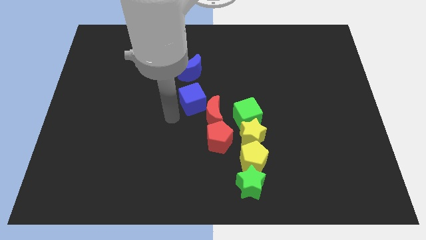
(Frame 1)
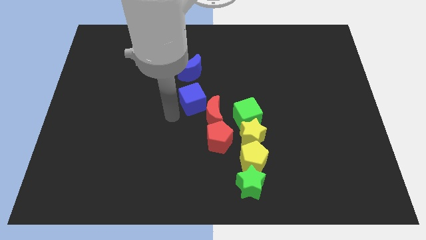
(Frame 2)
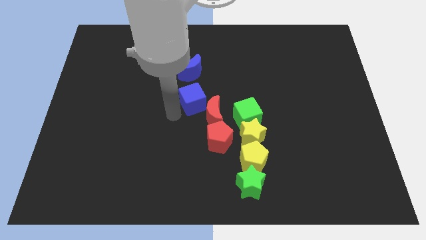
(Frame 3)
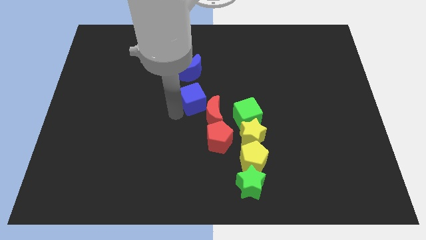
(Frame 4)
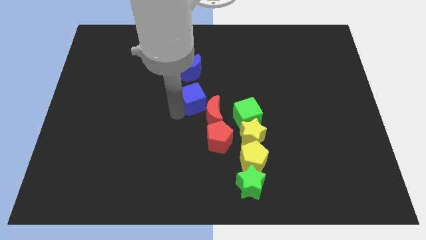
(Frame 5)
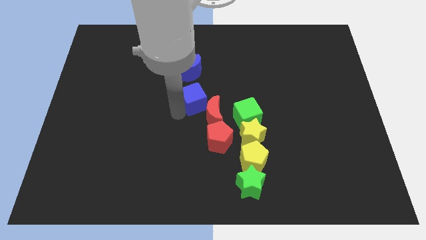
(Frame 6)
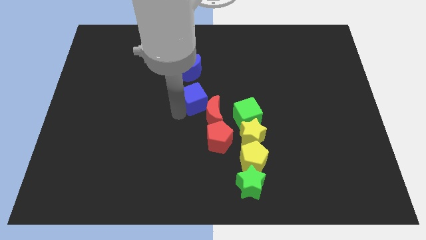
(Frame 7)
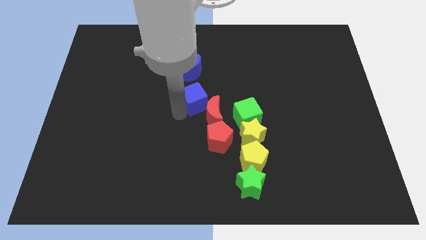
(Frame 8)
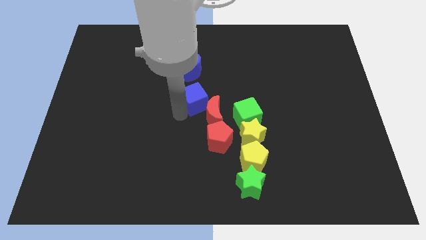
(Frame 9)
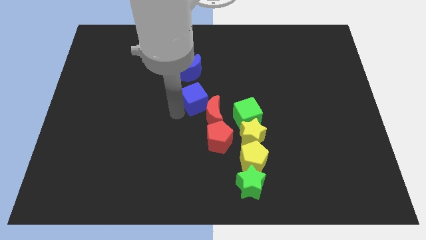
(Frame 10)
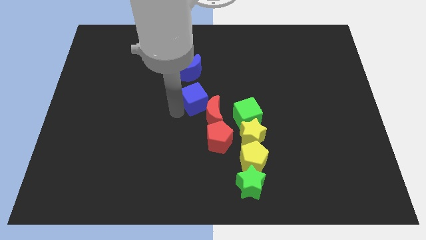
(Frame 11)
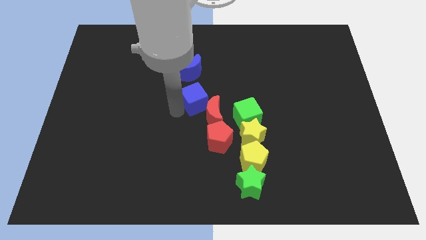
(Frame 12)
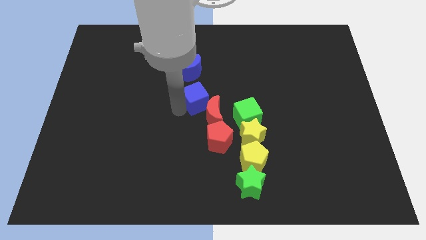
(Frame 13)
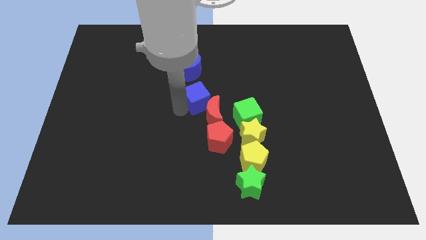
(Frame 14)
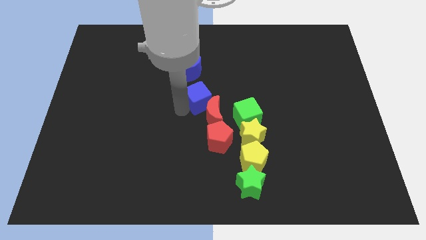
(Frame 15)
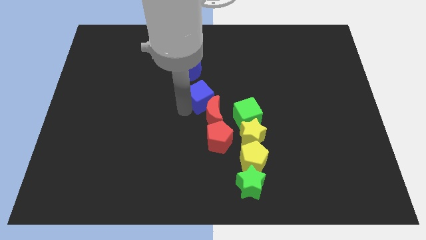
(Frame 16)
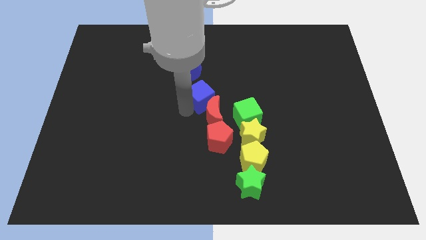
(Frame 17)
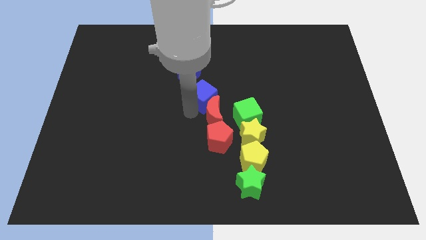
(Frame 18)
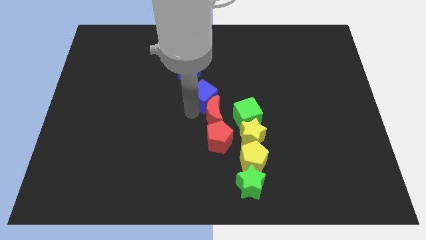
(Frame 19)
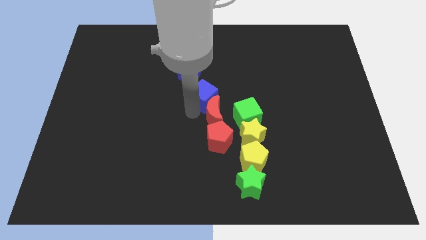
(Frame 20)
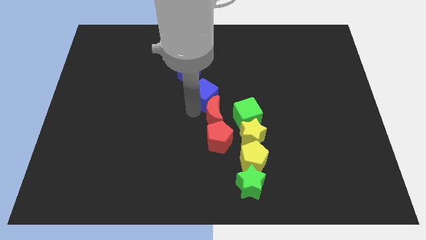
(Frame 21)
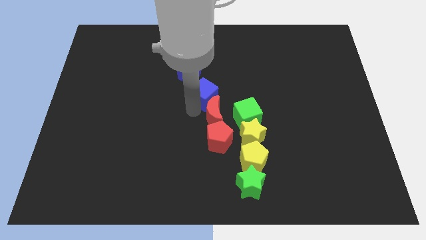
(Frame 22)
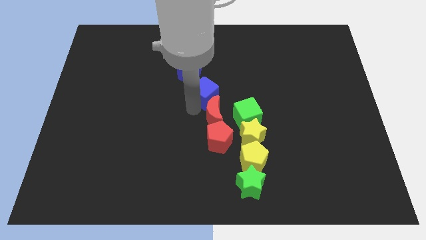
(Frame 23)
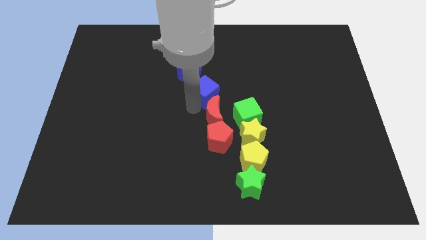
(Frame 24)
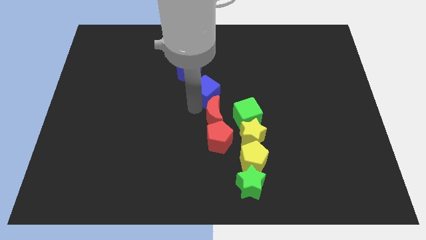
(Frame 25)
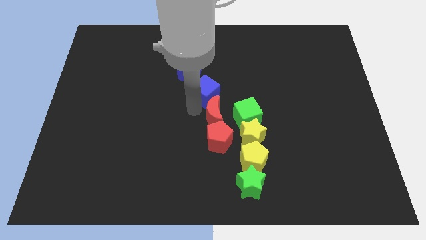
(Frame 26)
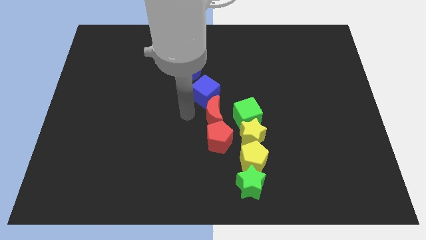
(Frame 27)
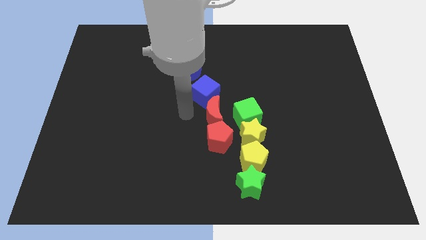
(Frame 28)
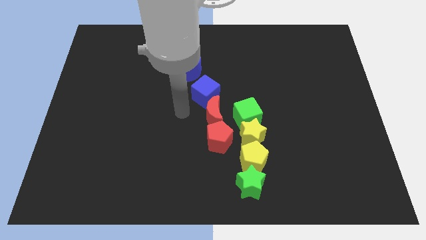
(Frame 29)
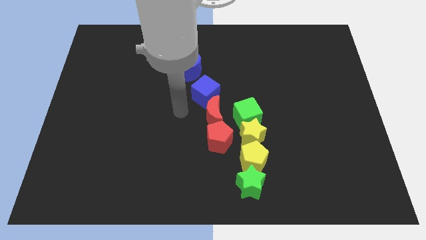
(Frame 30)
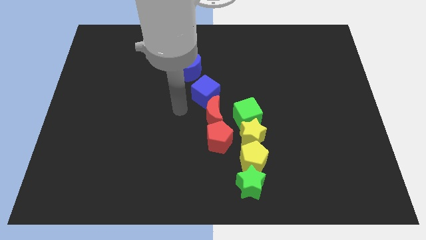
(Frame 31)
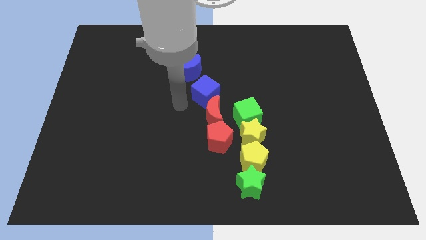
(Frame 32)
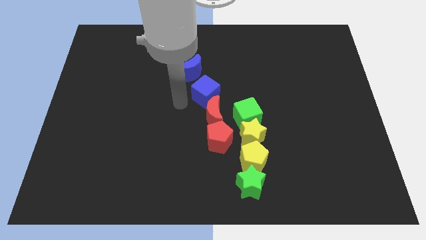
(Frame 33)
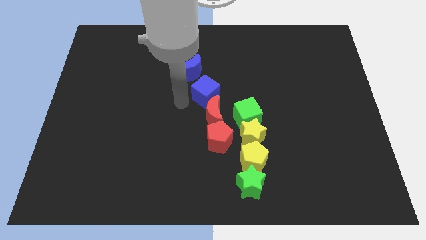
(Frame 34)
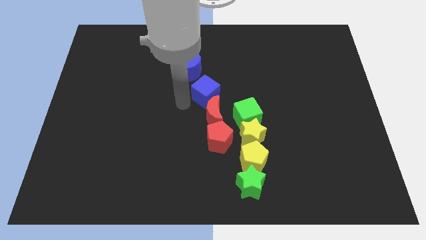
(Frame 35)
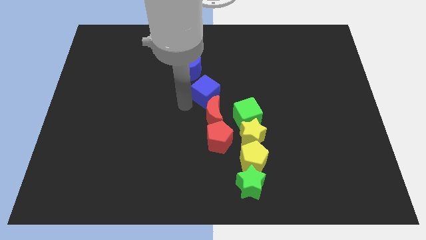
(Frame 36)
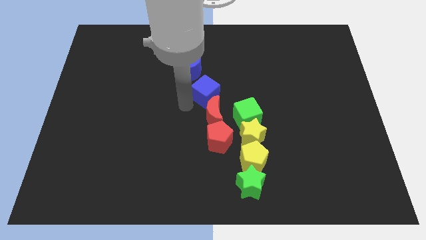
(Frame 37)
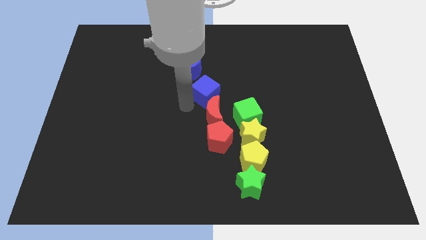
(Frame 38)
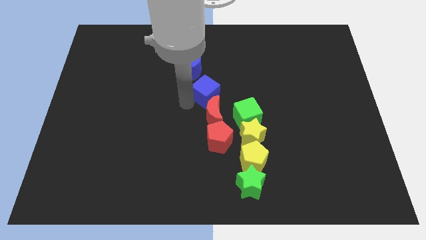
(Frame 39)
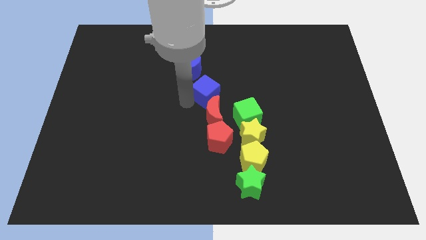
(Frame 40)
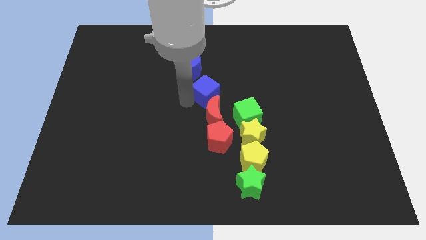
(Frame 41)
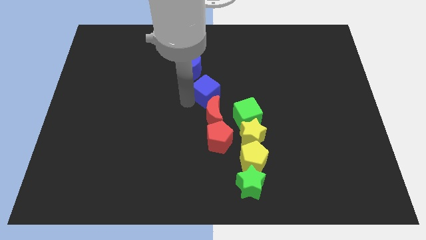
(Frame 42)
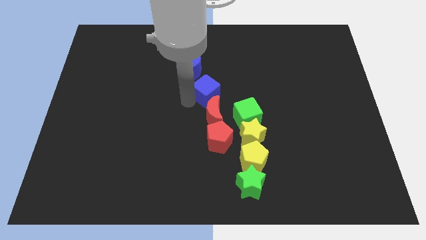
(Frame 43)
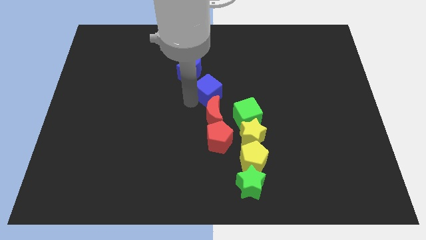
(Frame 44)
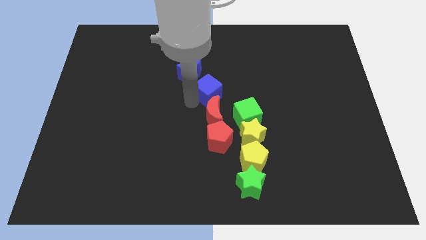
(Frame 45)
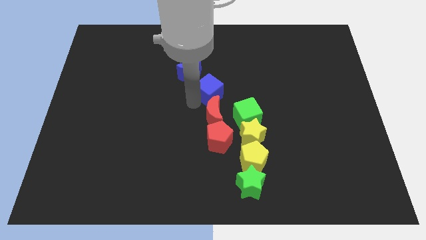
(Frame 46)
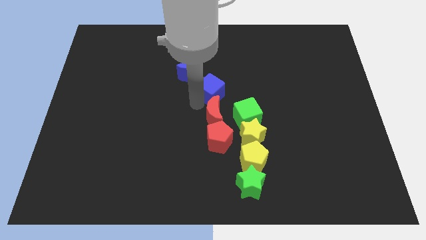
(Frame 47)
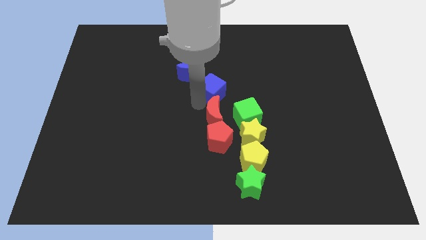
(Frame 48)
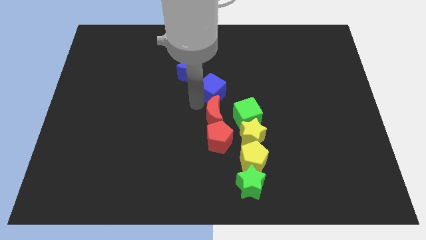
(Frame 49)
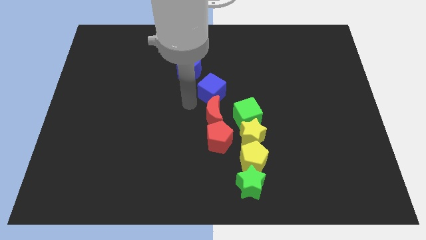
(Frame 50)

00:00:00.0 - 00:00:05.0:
place blue cube above red crescent

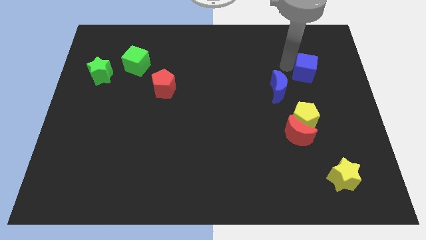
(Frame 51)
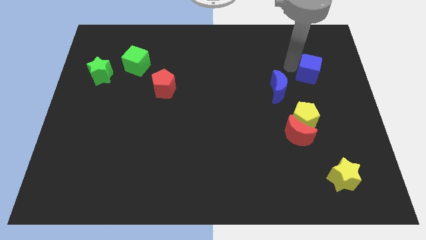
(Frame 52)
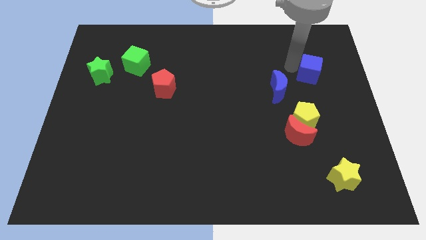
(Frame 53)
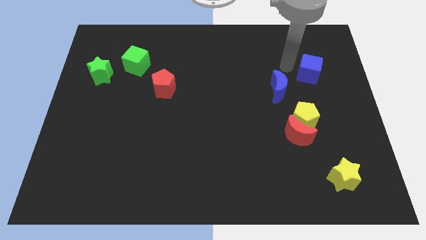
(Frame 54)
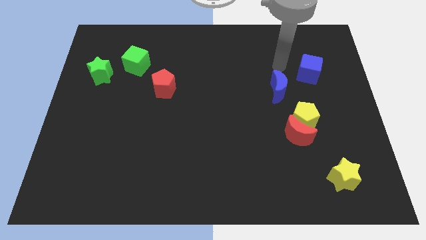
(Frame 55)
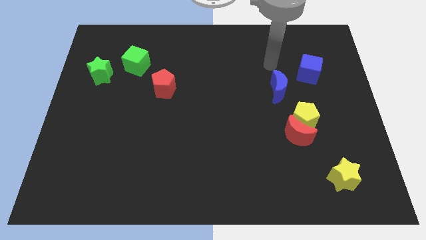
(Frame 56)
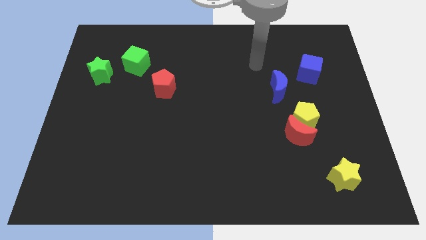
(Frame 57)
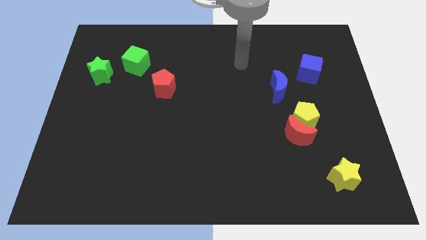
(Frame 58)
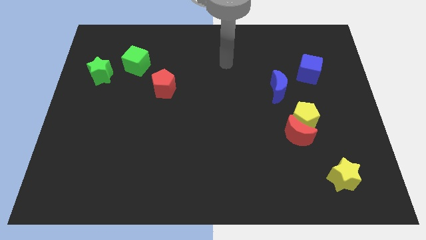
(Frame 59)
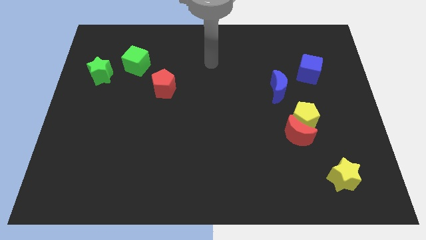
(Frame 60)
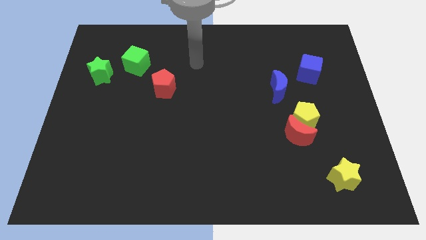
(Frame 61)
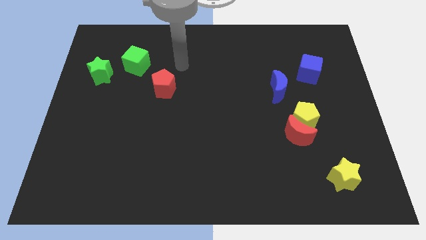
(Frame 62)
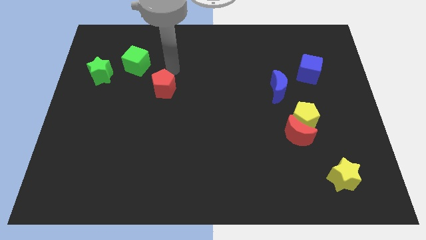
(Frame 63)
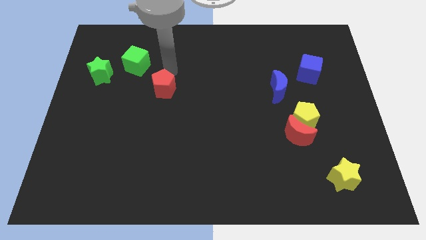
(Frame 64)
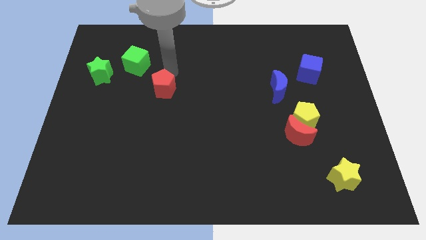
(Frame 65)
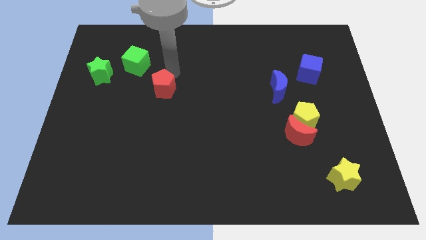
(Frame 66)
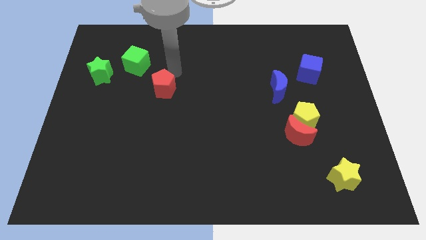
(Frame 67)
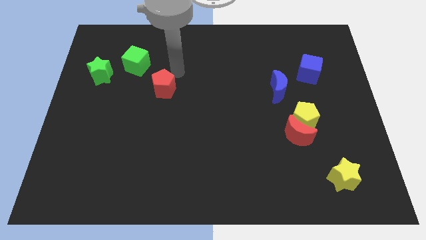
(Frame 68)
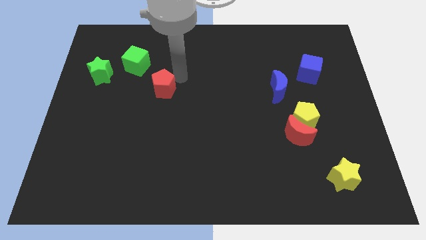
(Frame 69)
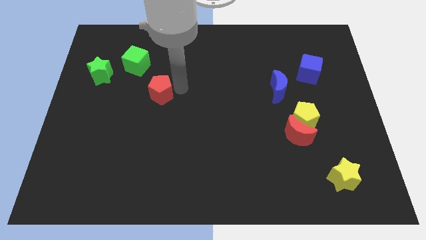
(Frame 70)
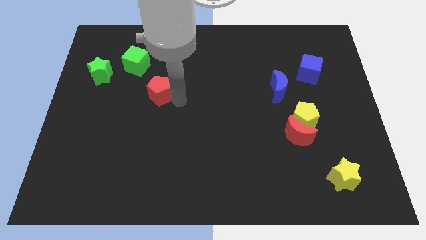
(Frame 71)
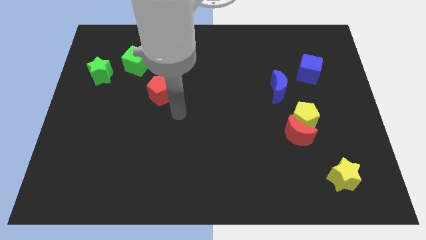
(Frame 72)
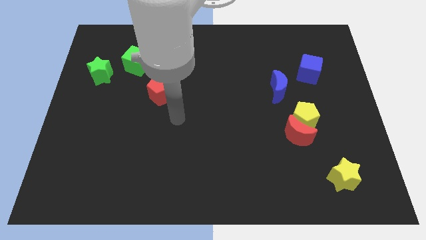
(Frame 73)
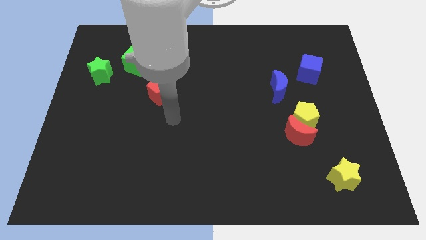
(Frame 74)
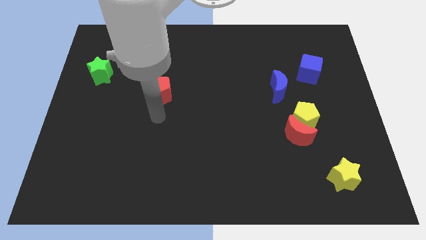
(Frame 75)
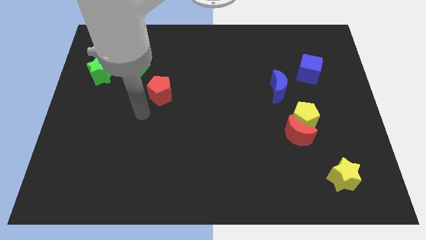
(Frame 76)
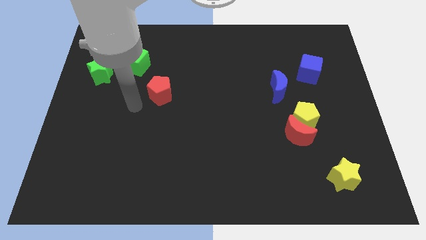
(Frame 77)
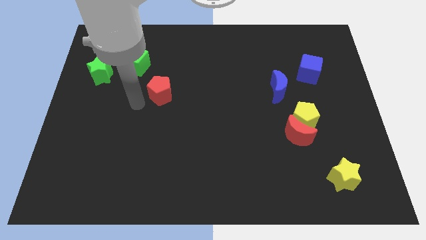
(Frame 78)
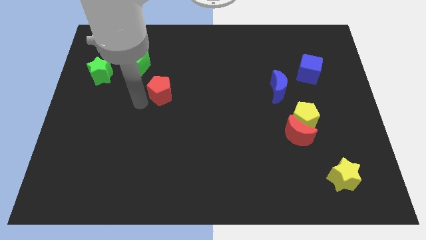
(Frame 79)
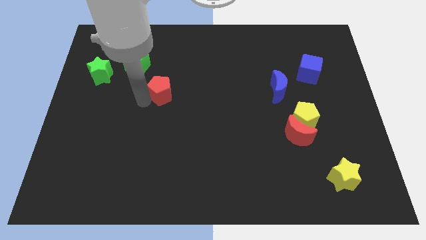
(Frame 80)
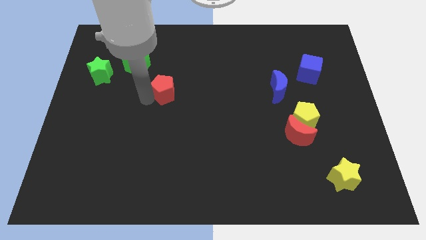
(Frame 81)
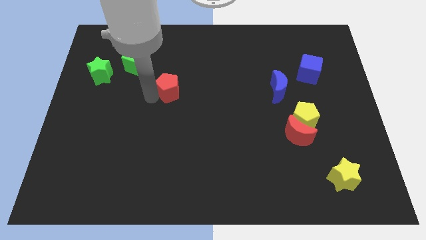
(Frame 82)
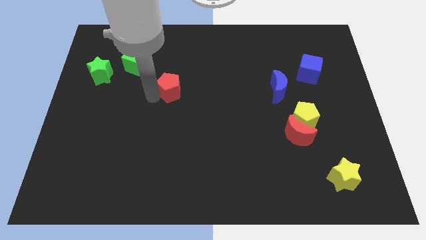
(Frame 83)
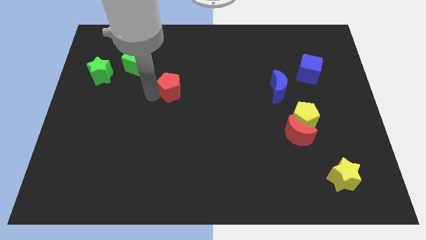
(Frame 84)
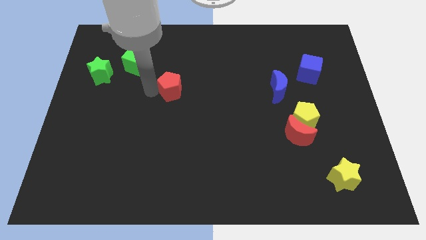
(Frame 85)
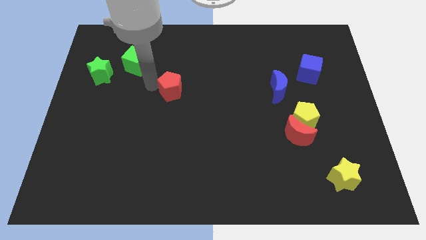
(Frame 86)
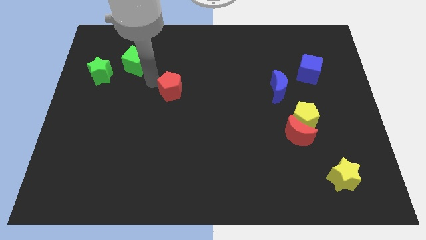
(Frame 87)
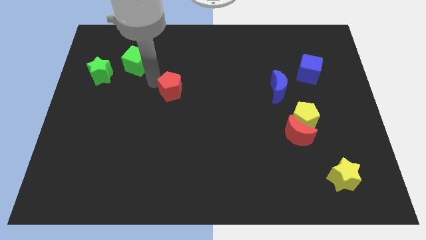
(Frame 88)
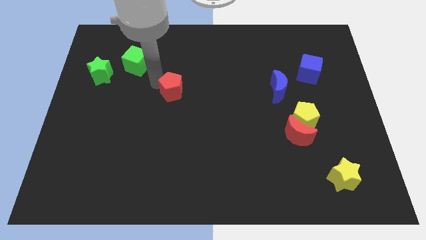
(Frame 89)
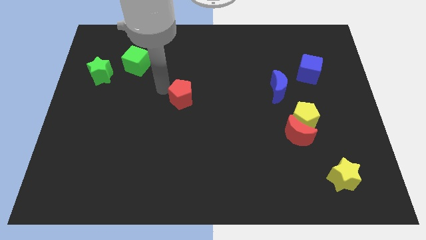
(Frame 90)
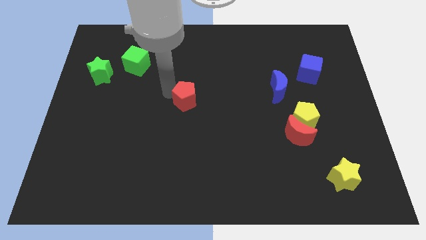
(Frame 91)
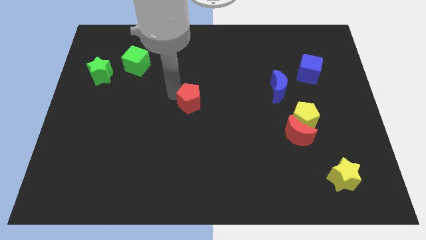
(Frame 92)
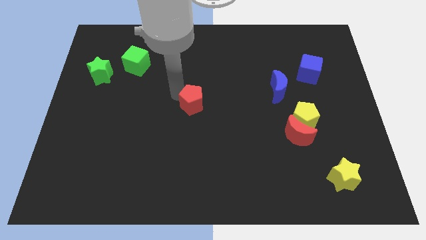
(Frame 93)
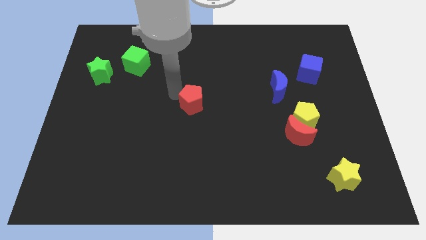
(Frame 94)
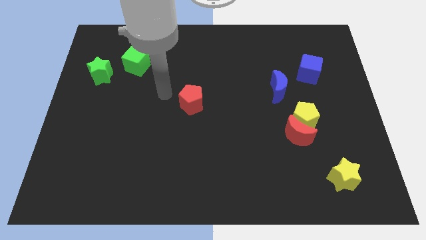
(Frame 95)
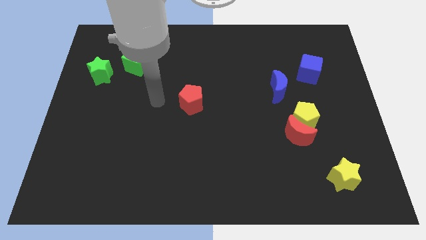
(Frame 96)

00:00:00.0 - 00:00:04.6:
push red pentagon towards center
